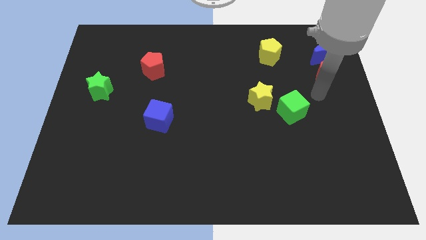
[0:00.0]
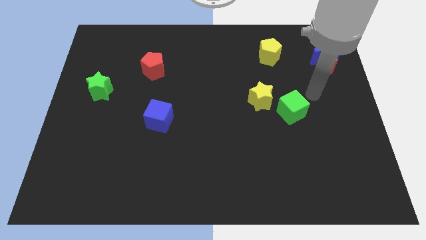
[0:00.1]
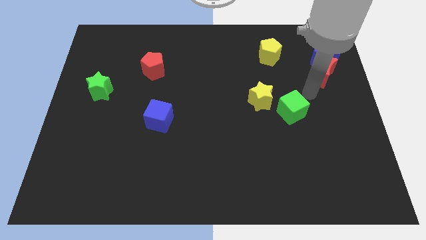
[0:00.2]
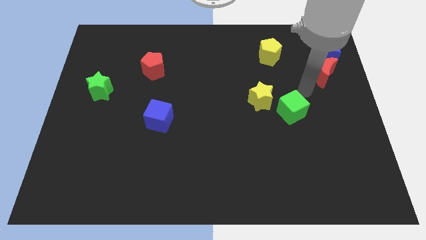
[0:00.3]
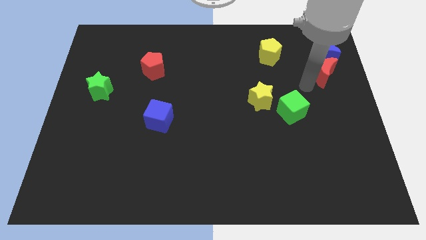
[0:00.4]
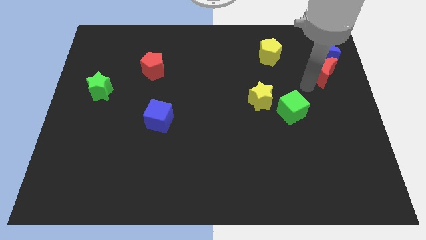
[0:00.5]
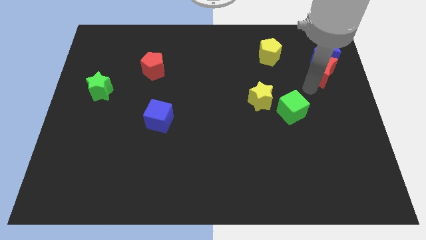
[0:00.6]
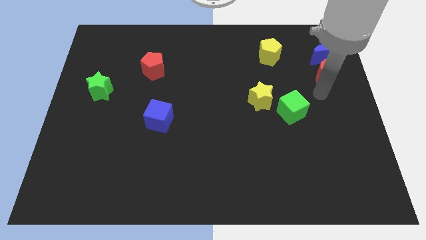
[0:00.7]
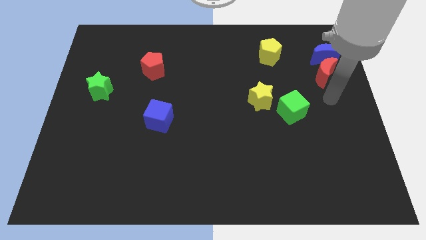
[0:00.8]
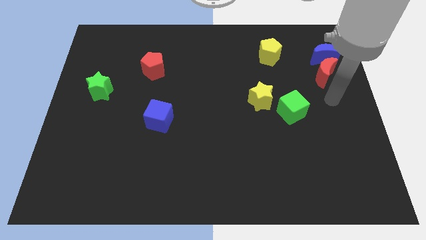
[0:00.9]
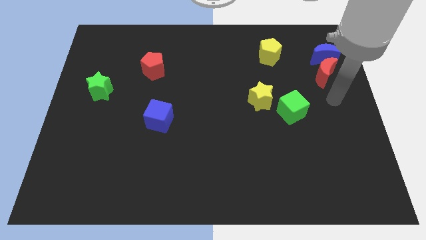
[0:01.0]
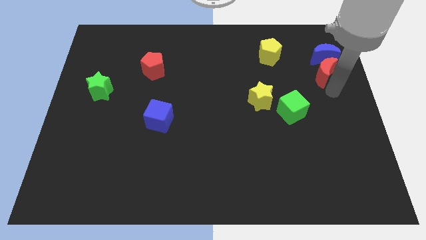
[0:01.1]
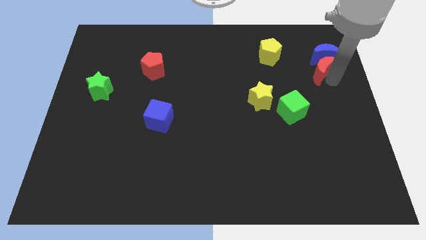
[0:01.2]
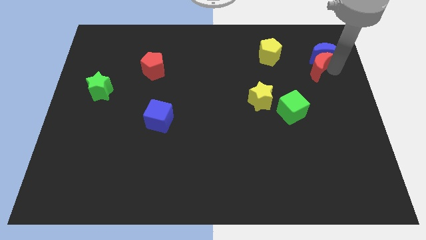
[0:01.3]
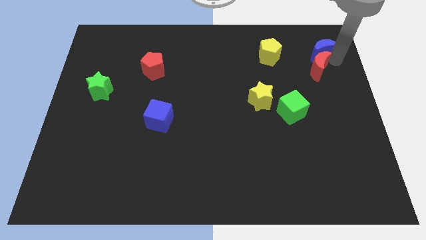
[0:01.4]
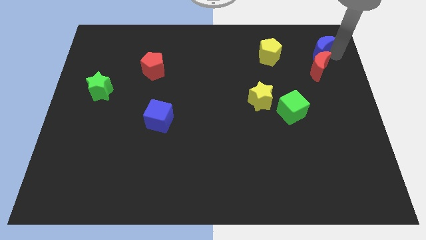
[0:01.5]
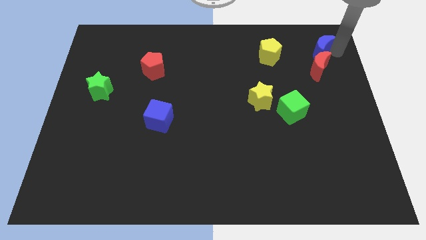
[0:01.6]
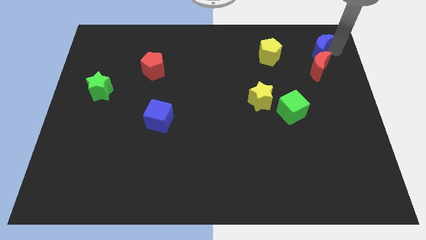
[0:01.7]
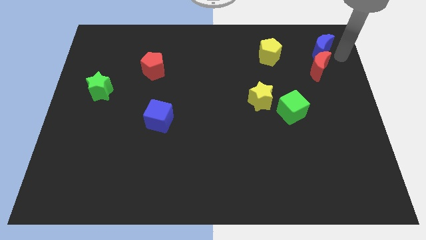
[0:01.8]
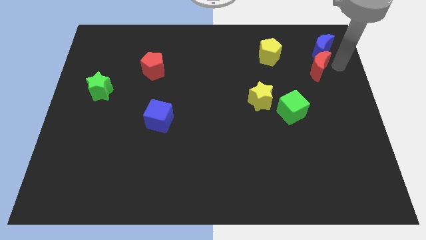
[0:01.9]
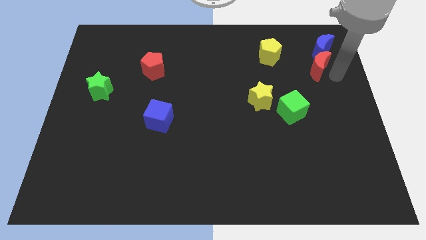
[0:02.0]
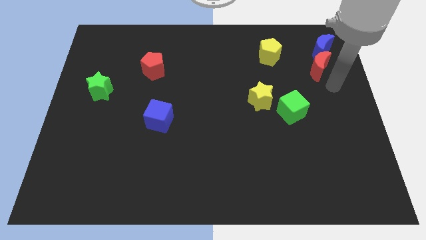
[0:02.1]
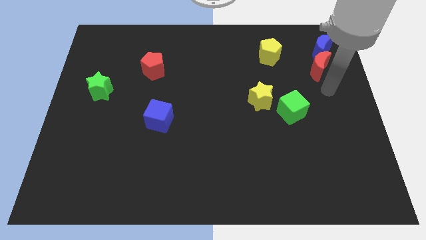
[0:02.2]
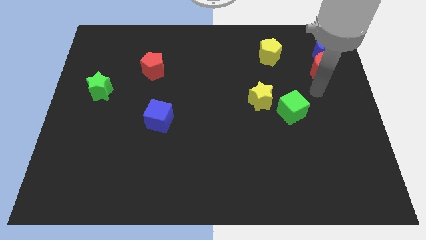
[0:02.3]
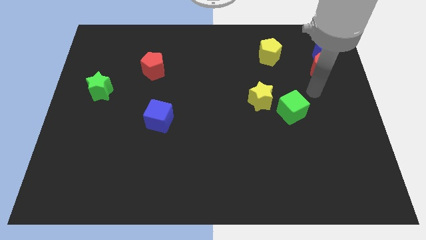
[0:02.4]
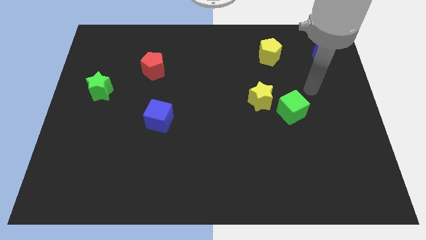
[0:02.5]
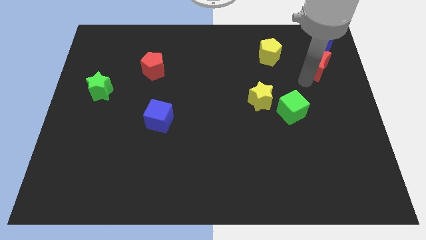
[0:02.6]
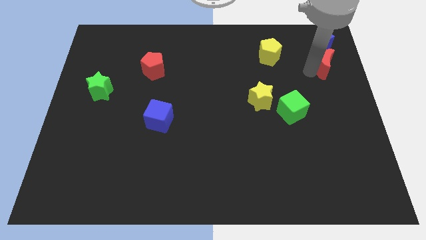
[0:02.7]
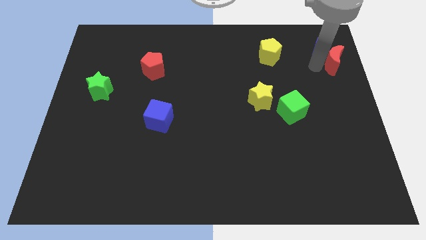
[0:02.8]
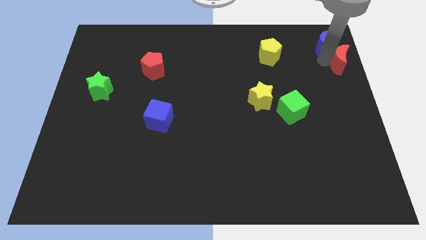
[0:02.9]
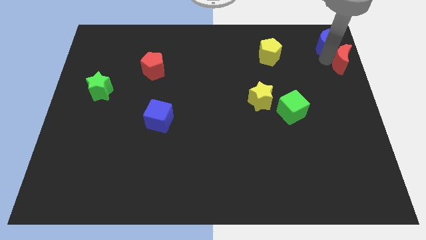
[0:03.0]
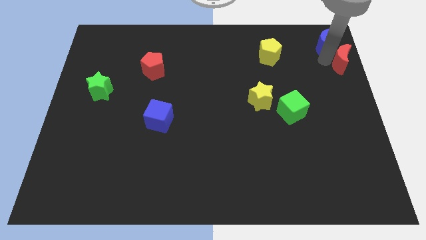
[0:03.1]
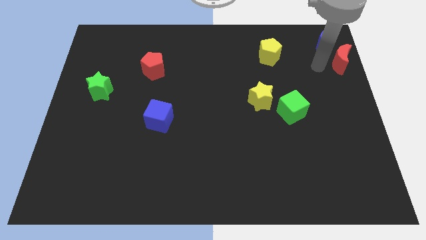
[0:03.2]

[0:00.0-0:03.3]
place your arm in between the blue moon and red moon

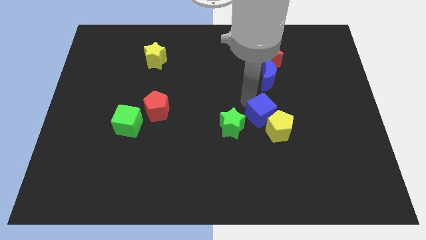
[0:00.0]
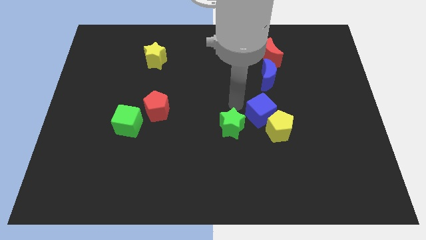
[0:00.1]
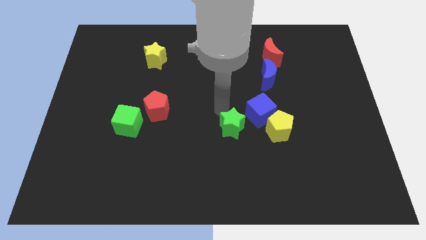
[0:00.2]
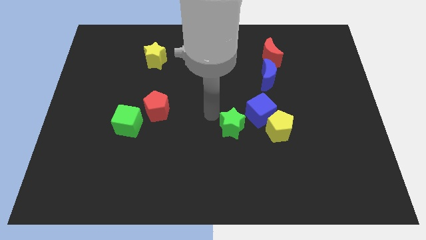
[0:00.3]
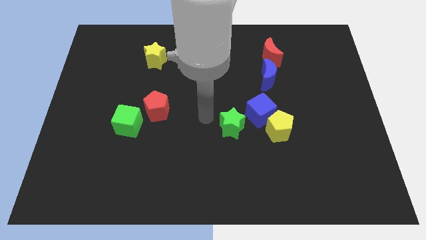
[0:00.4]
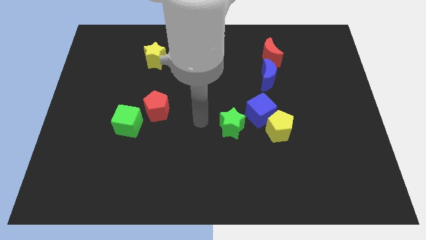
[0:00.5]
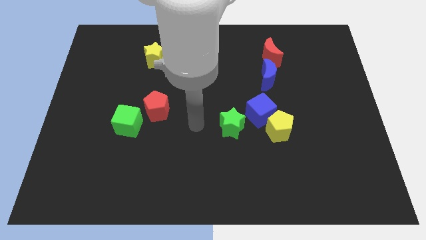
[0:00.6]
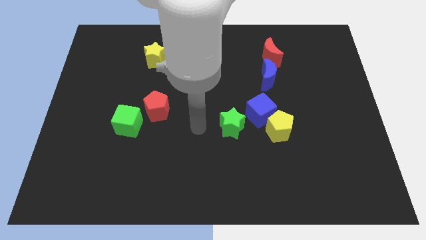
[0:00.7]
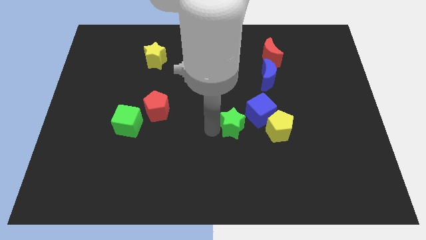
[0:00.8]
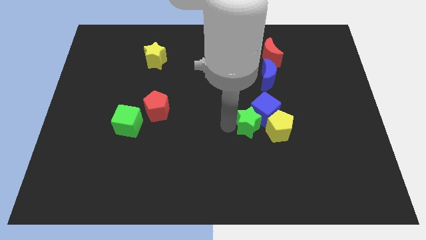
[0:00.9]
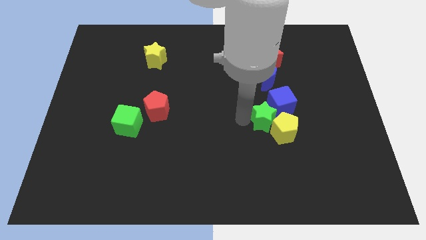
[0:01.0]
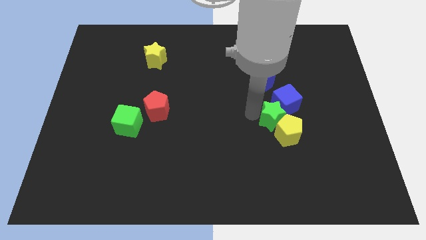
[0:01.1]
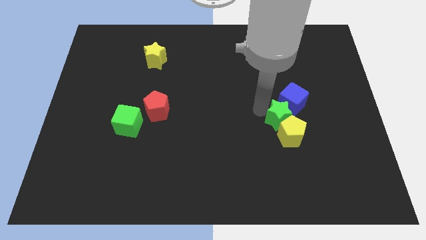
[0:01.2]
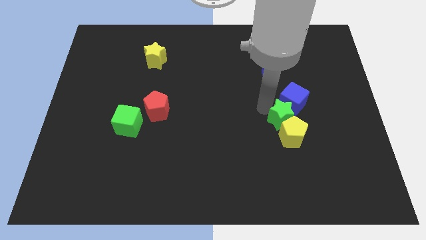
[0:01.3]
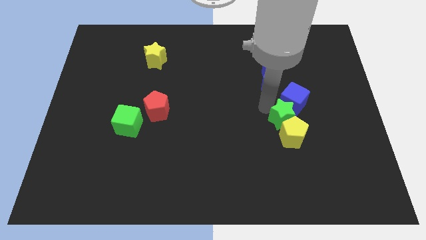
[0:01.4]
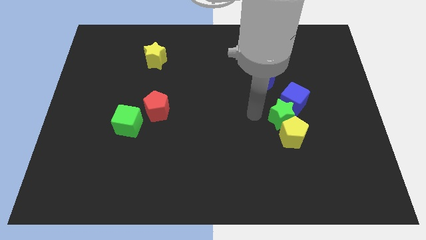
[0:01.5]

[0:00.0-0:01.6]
push the green star between yellow pentagon and blue cube

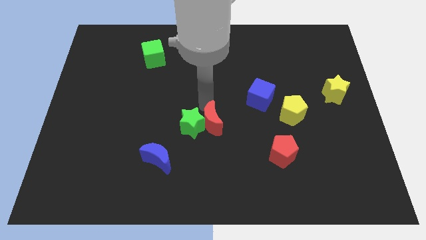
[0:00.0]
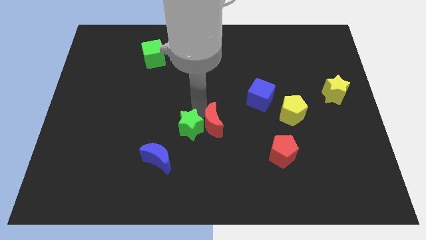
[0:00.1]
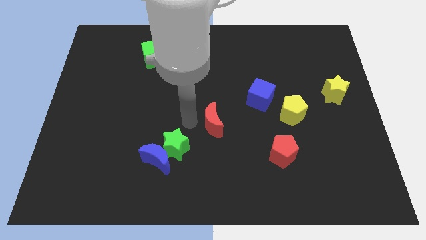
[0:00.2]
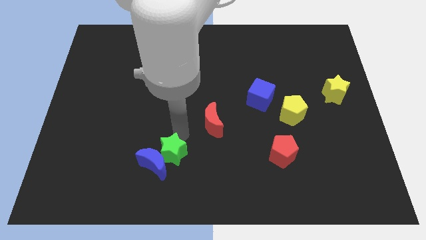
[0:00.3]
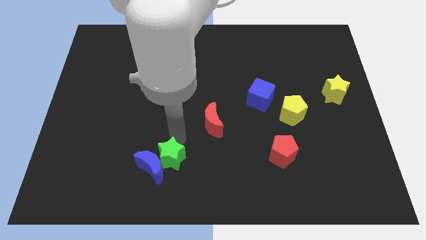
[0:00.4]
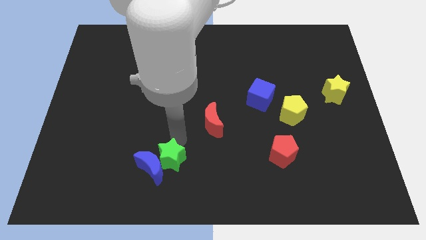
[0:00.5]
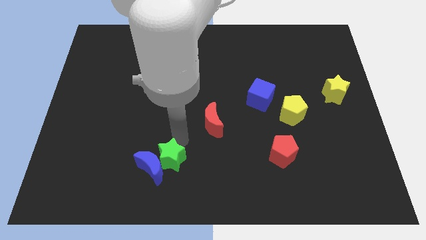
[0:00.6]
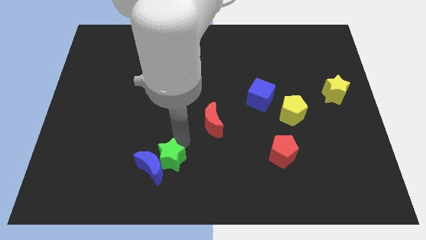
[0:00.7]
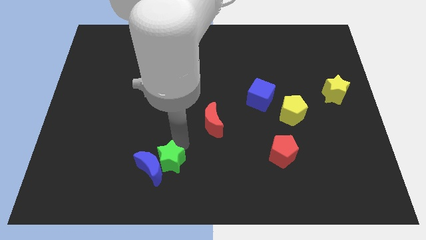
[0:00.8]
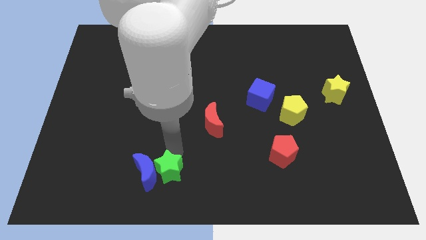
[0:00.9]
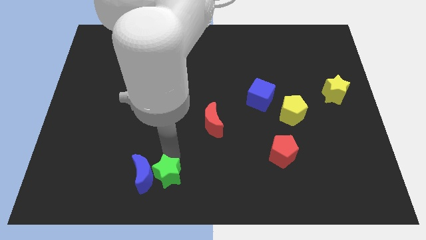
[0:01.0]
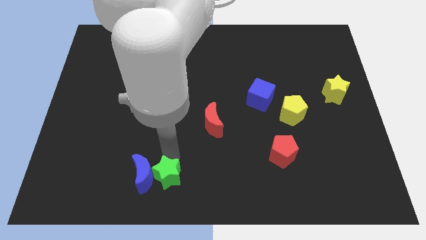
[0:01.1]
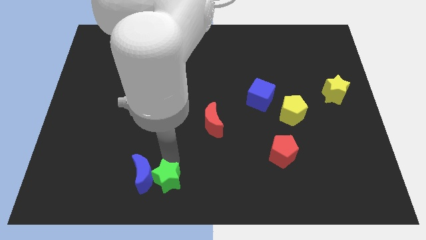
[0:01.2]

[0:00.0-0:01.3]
push the green star into blue moon

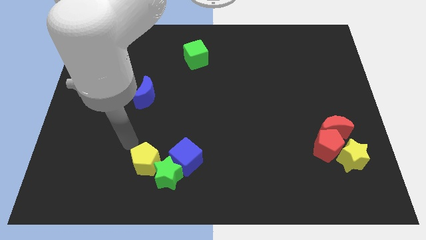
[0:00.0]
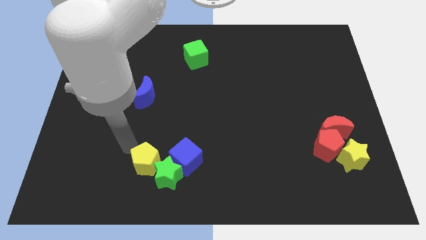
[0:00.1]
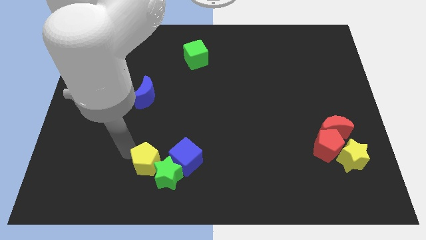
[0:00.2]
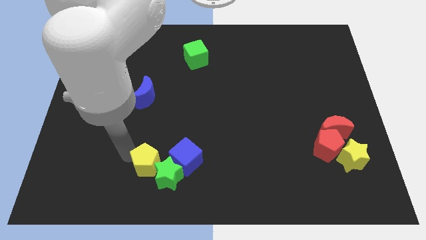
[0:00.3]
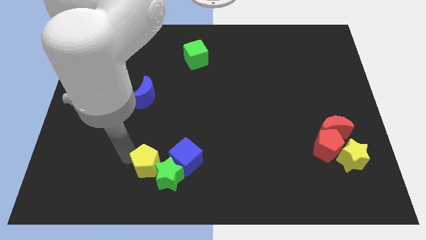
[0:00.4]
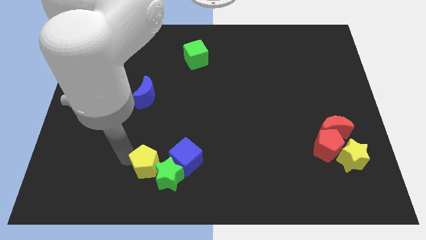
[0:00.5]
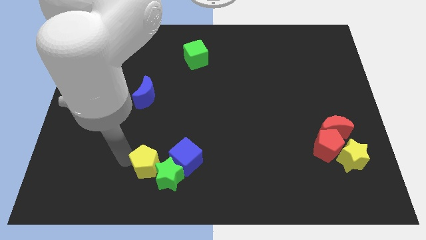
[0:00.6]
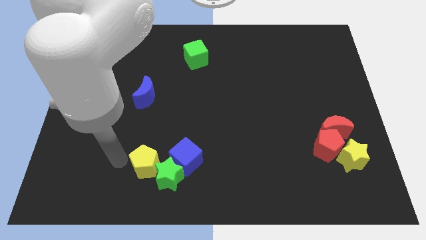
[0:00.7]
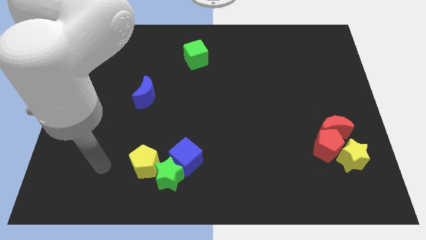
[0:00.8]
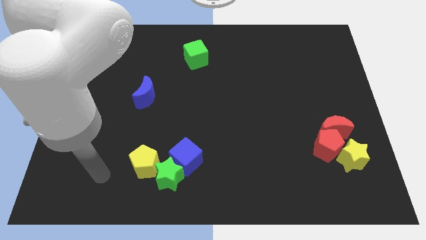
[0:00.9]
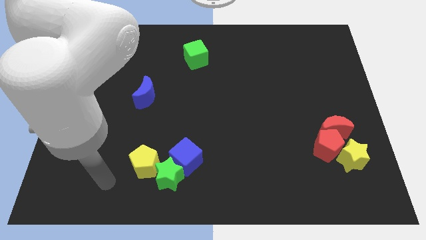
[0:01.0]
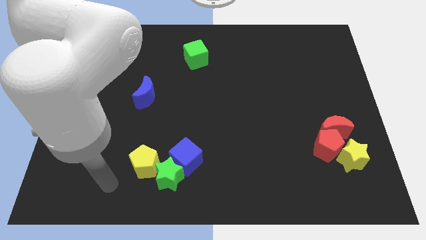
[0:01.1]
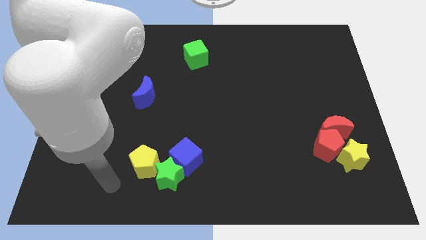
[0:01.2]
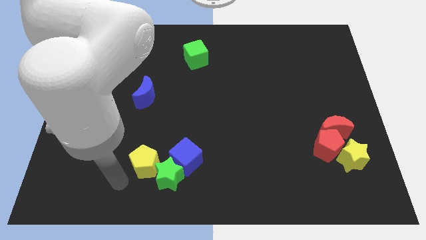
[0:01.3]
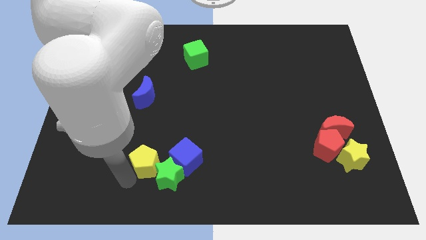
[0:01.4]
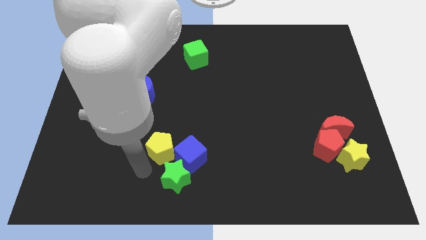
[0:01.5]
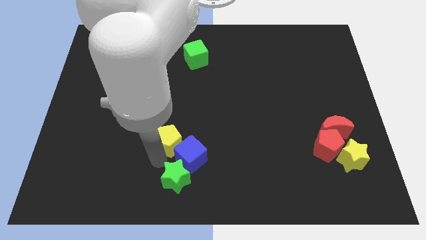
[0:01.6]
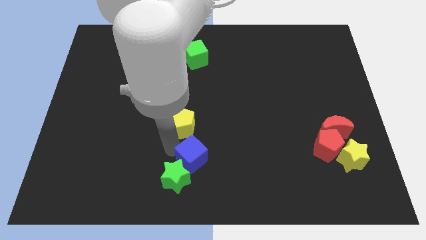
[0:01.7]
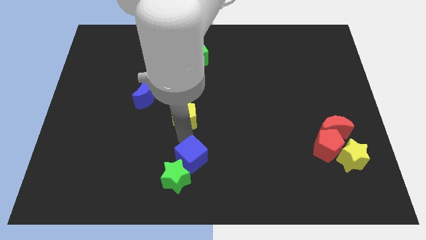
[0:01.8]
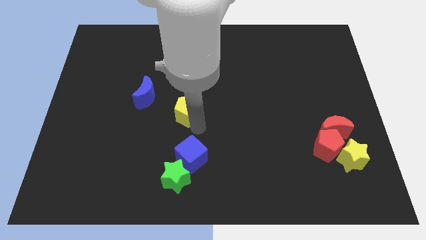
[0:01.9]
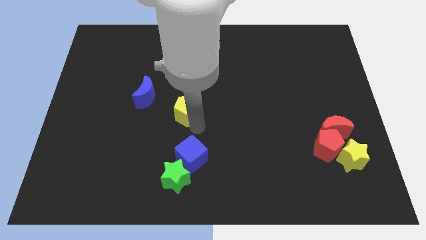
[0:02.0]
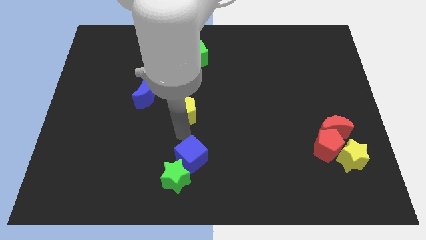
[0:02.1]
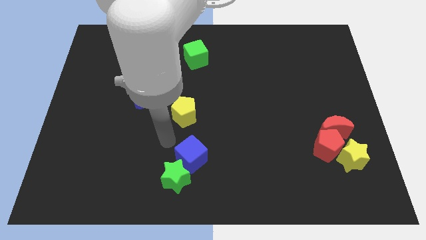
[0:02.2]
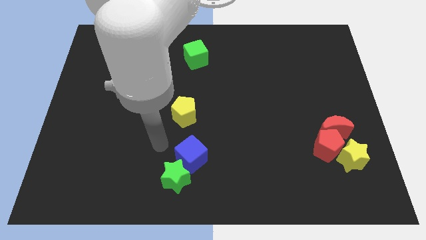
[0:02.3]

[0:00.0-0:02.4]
move the yellow pentagon near to the center side of the board

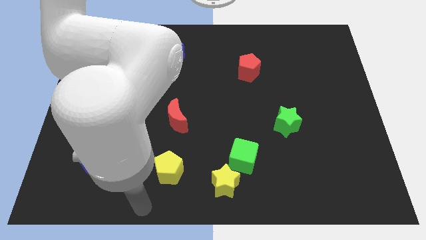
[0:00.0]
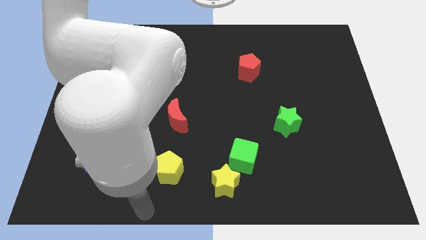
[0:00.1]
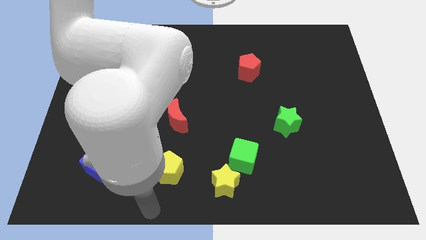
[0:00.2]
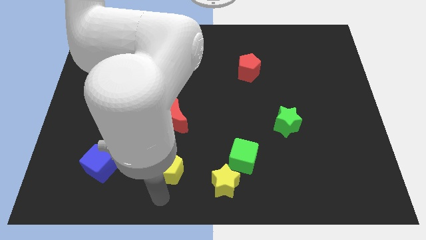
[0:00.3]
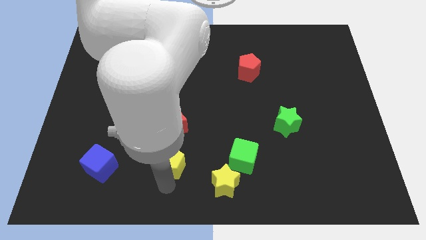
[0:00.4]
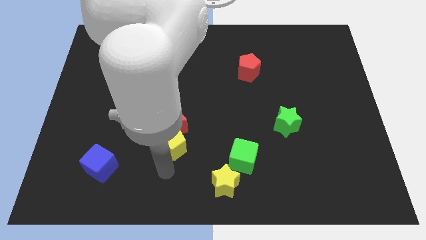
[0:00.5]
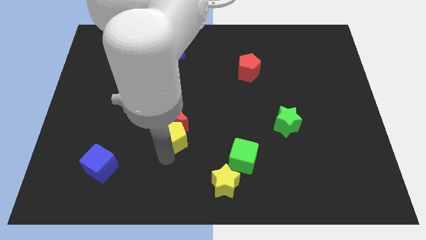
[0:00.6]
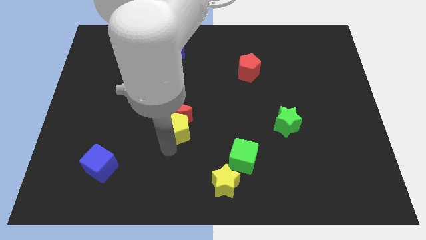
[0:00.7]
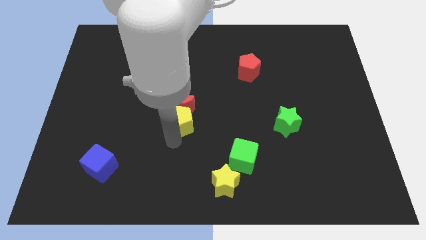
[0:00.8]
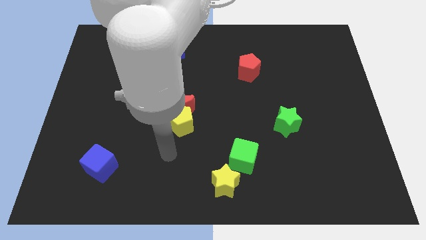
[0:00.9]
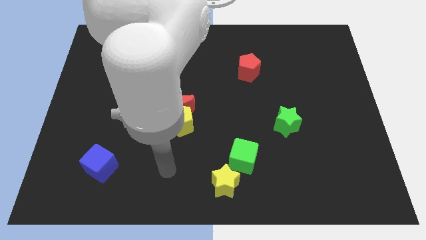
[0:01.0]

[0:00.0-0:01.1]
push the yellow pentagon into red crescent
